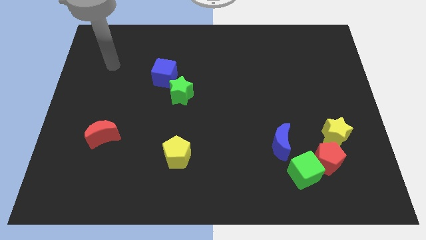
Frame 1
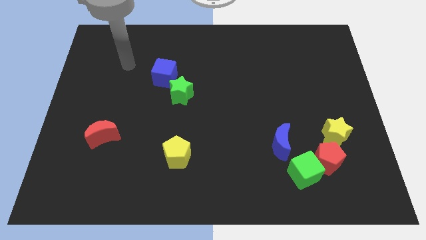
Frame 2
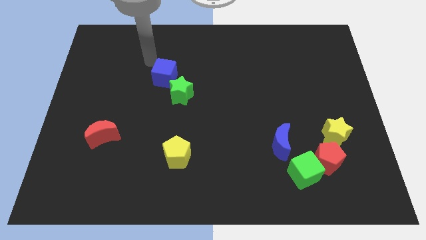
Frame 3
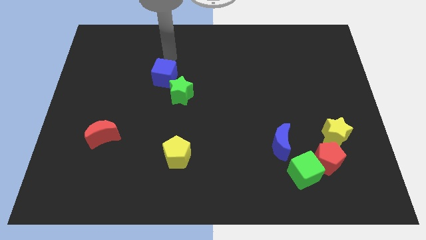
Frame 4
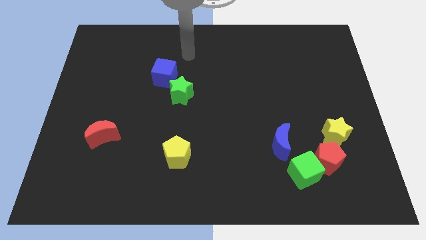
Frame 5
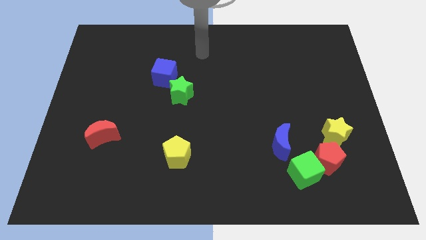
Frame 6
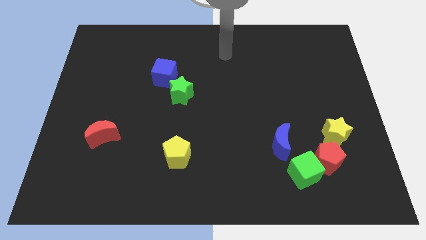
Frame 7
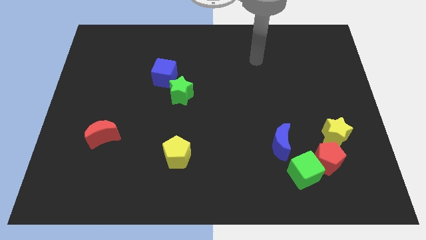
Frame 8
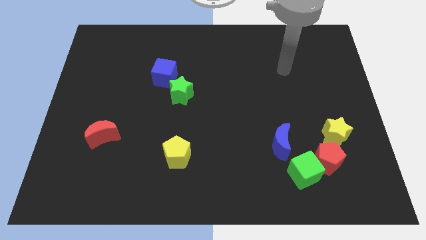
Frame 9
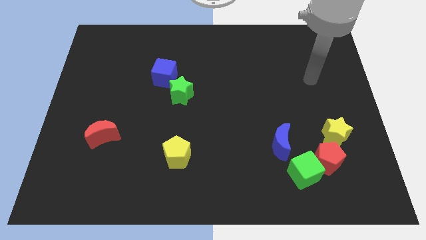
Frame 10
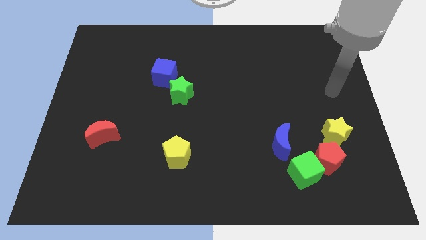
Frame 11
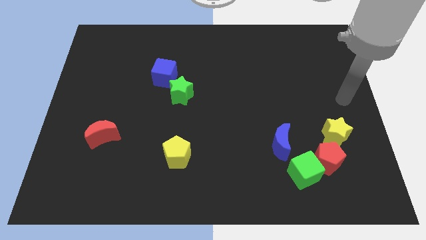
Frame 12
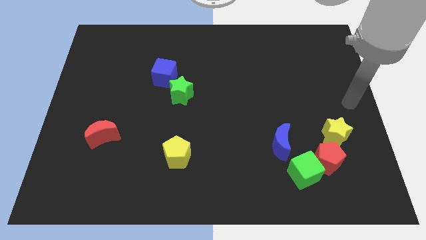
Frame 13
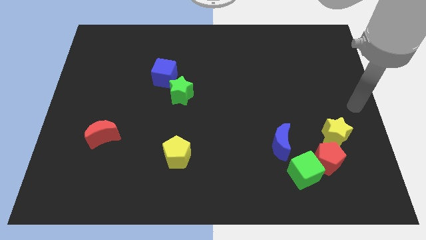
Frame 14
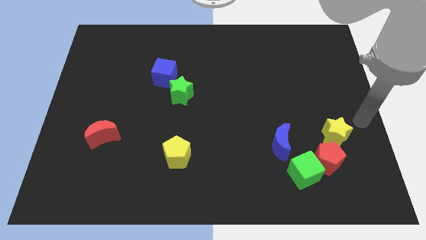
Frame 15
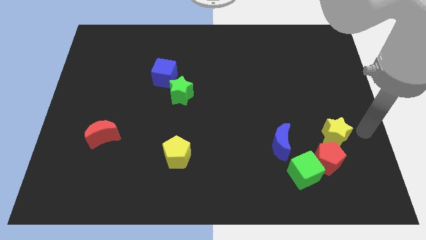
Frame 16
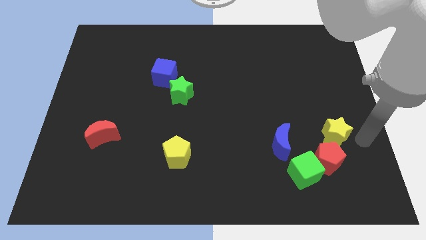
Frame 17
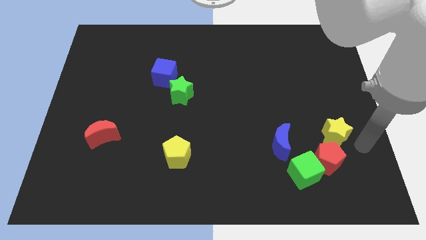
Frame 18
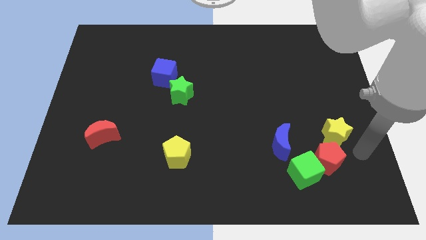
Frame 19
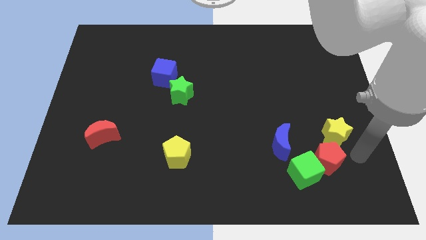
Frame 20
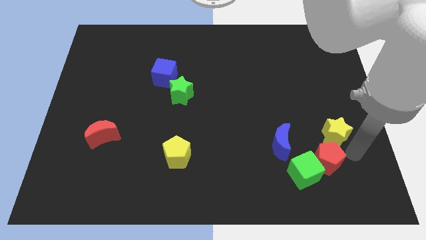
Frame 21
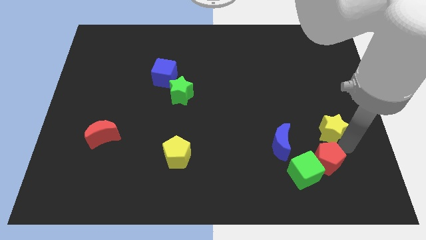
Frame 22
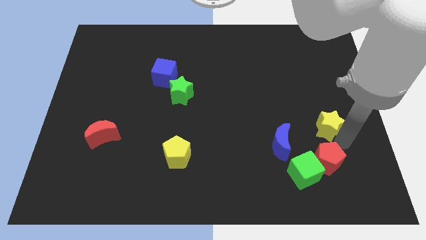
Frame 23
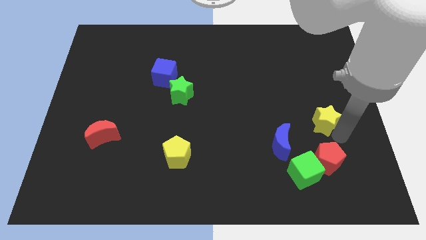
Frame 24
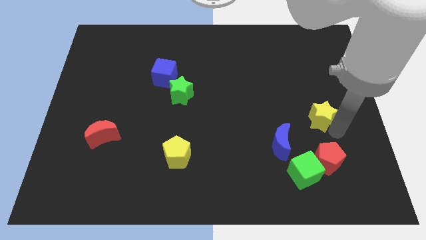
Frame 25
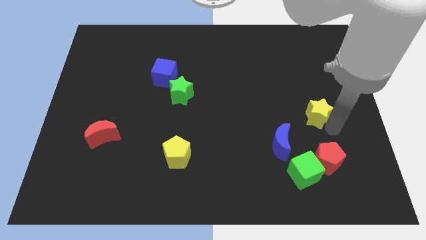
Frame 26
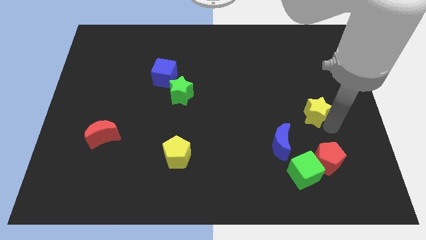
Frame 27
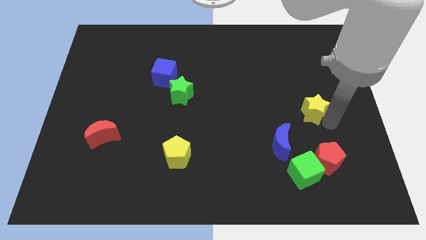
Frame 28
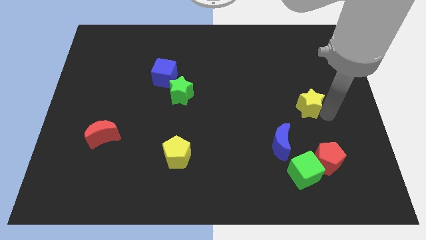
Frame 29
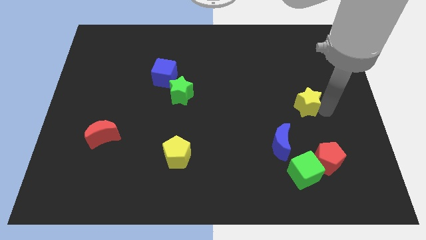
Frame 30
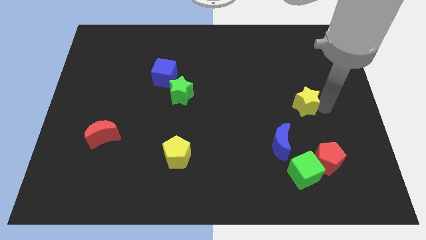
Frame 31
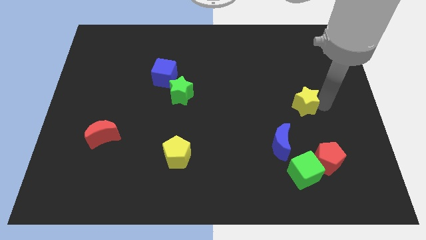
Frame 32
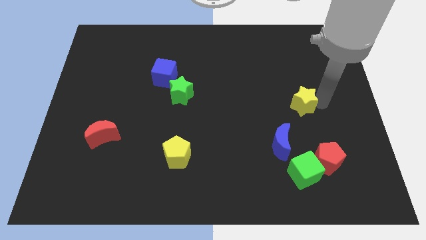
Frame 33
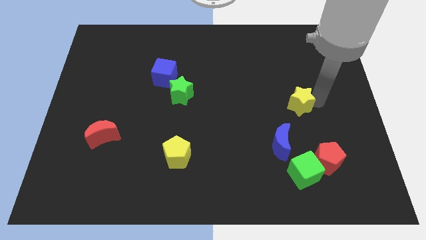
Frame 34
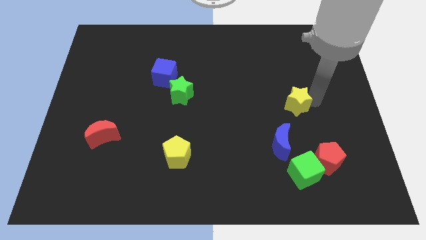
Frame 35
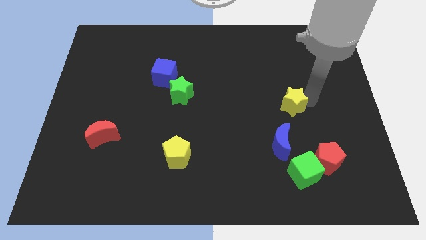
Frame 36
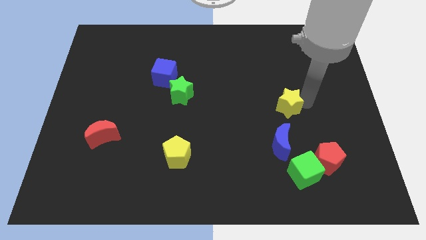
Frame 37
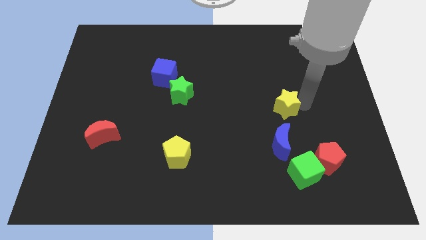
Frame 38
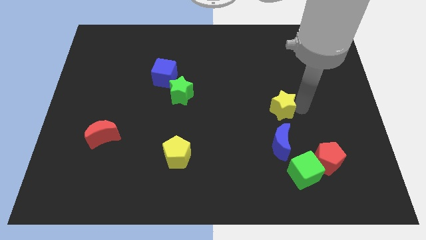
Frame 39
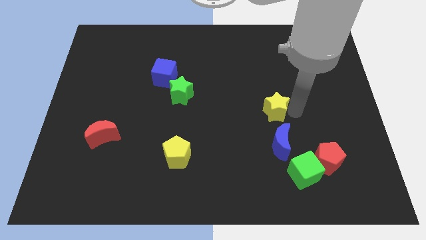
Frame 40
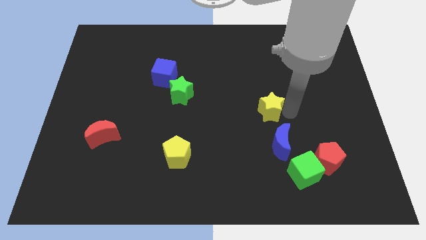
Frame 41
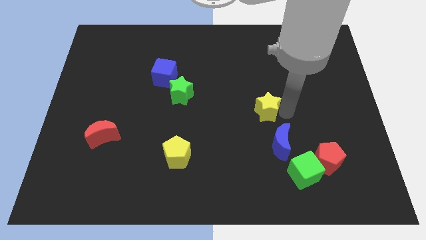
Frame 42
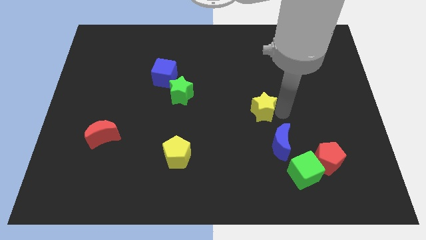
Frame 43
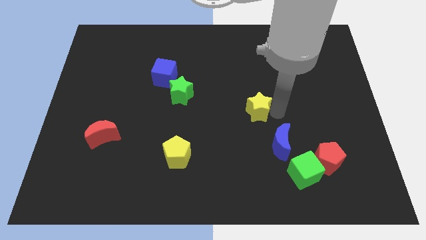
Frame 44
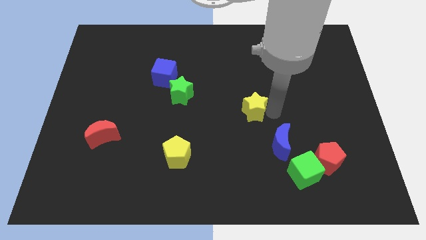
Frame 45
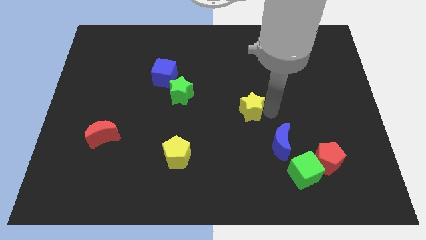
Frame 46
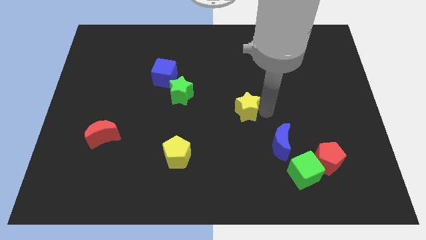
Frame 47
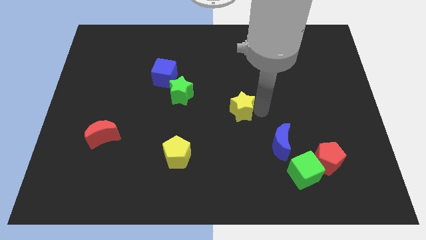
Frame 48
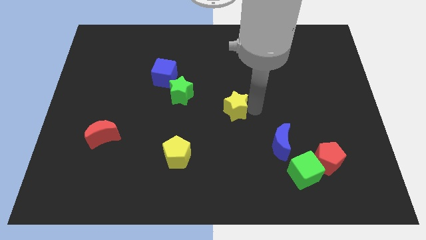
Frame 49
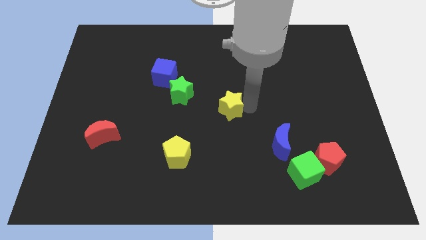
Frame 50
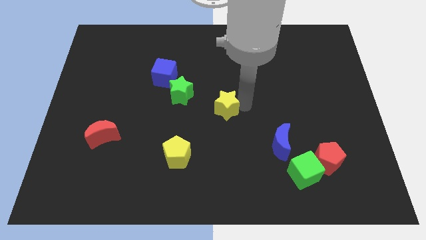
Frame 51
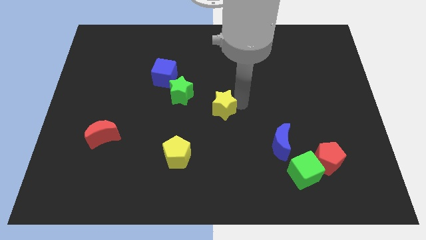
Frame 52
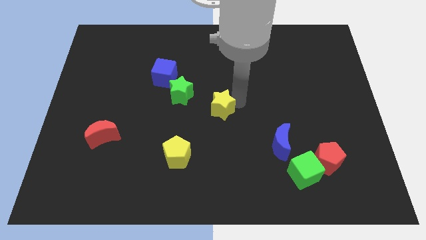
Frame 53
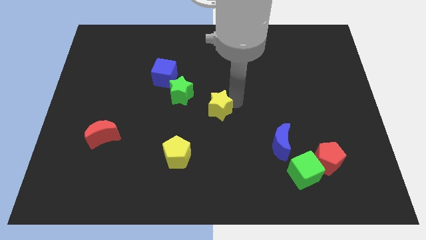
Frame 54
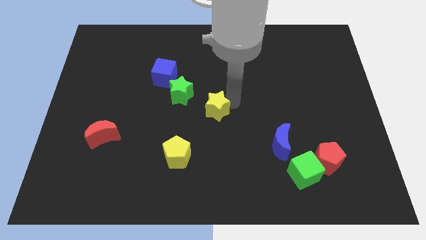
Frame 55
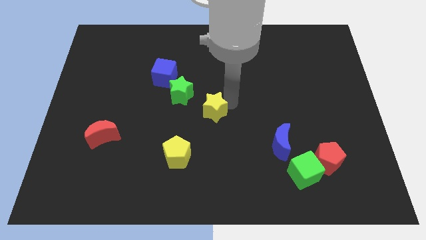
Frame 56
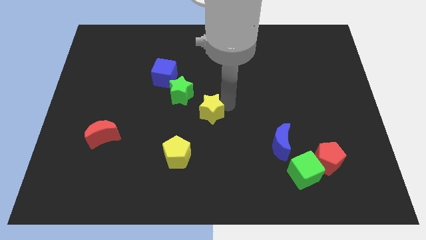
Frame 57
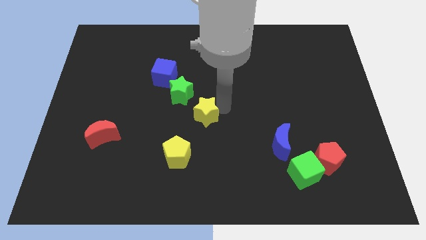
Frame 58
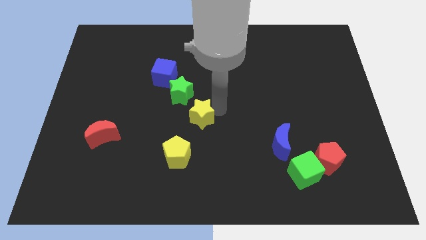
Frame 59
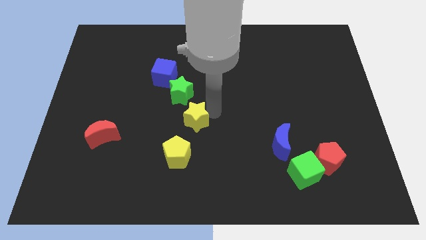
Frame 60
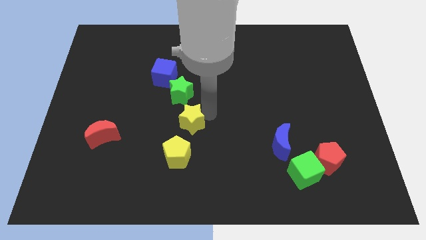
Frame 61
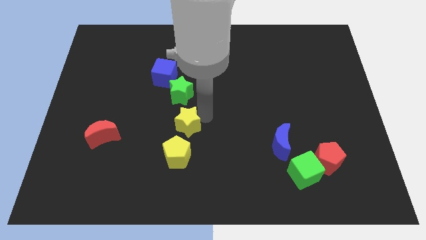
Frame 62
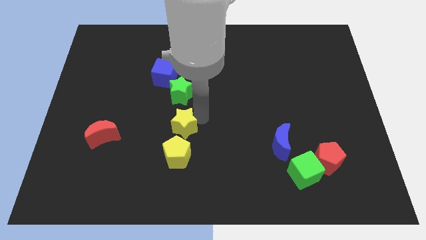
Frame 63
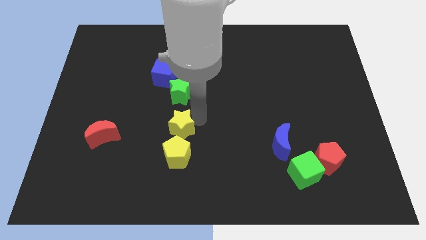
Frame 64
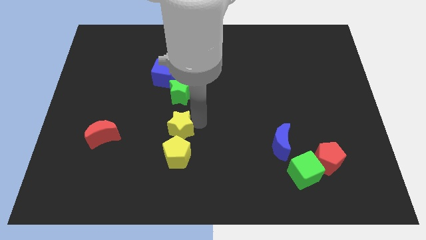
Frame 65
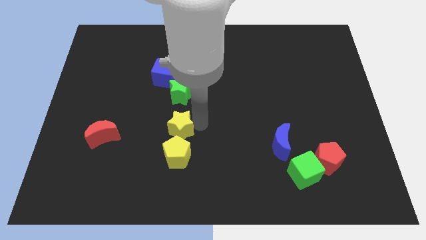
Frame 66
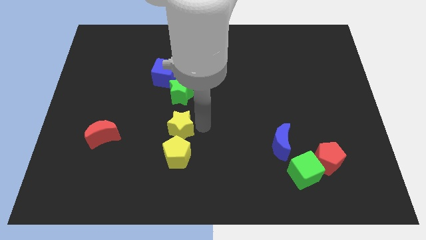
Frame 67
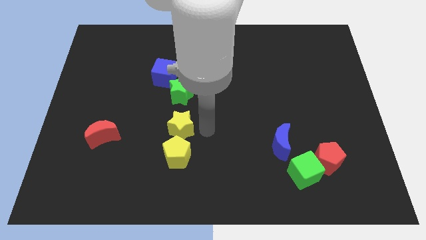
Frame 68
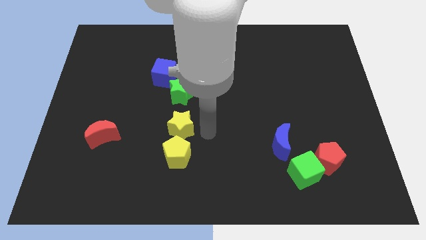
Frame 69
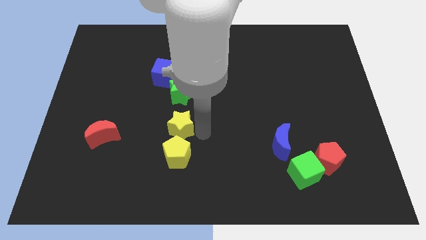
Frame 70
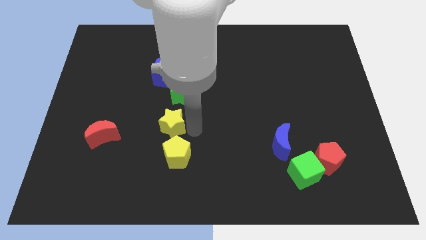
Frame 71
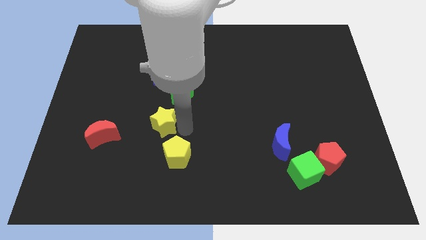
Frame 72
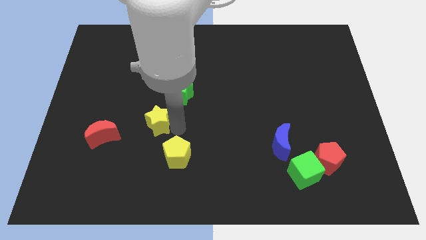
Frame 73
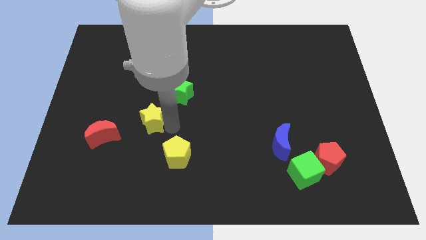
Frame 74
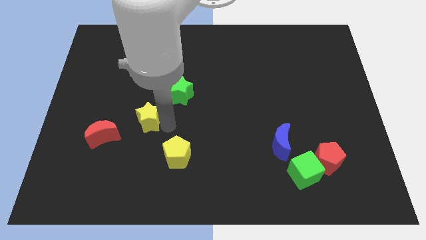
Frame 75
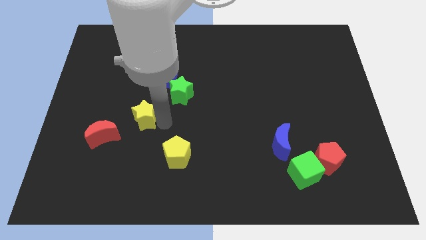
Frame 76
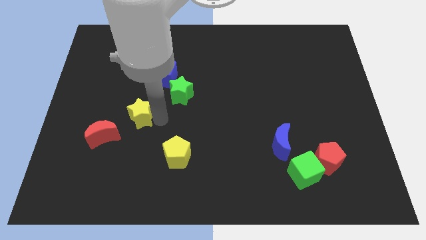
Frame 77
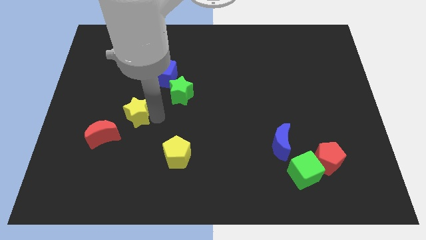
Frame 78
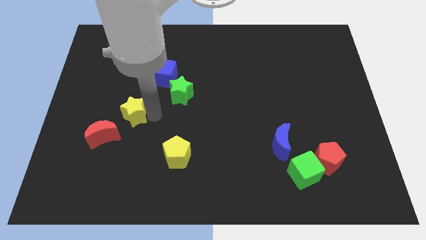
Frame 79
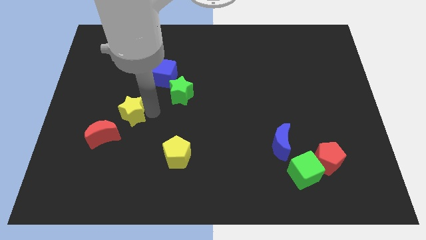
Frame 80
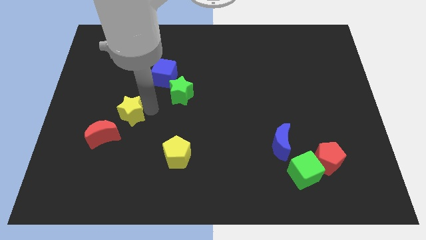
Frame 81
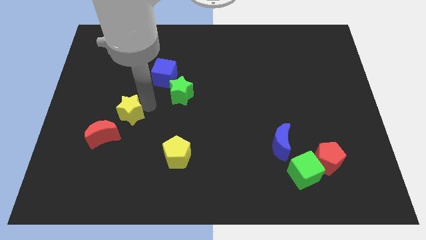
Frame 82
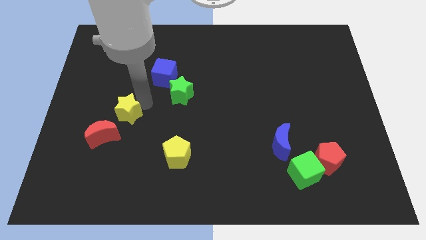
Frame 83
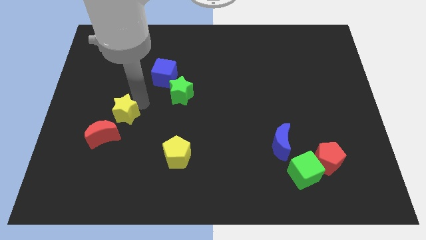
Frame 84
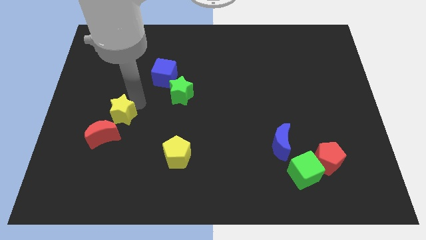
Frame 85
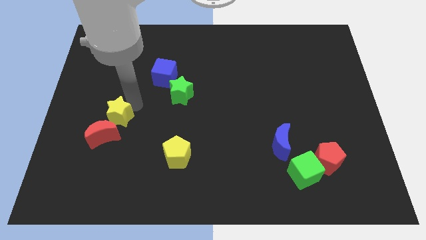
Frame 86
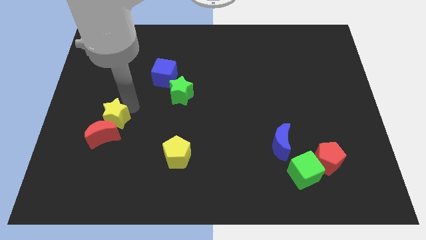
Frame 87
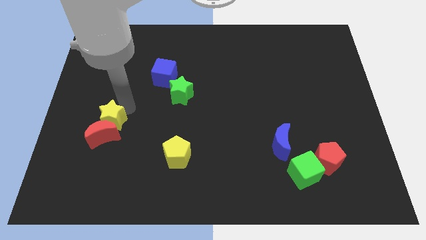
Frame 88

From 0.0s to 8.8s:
push the yellow star close to the red moon
